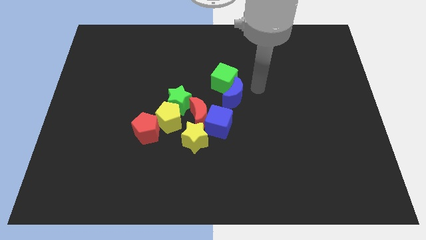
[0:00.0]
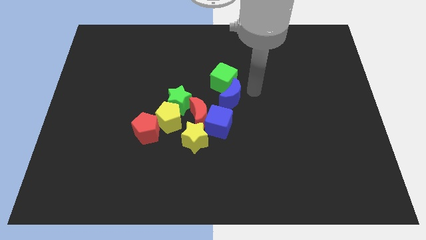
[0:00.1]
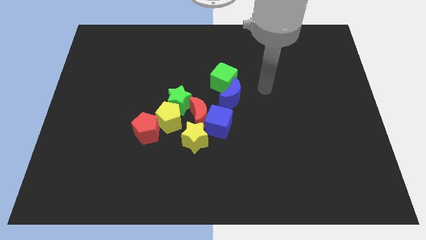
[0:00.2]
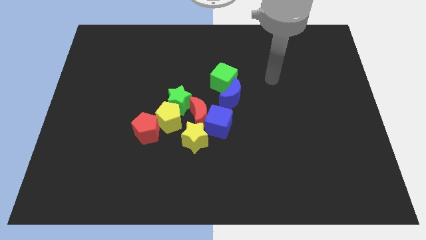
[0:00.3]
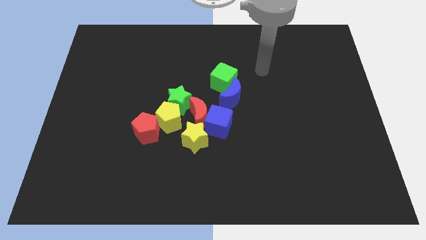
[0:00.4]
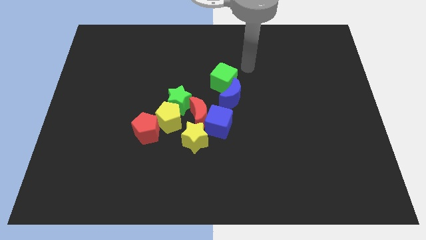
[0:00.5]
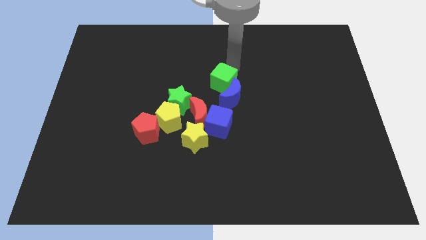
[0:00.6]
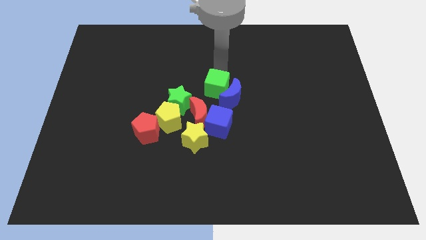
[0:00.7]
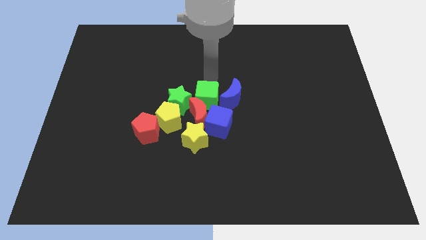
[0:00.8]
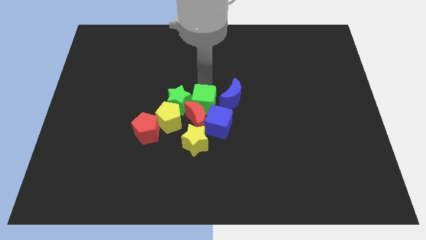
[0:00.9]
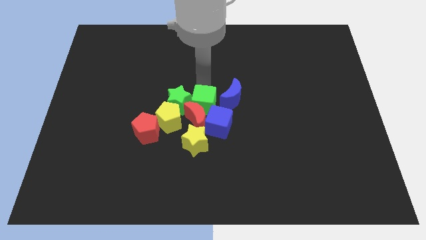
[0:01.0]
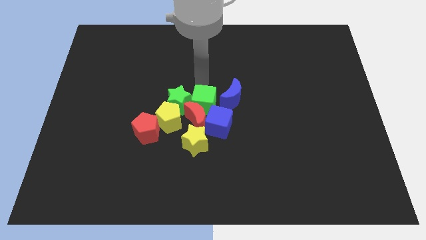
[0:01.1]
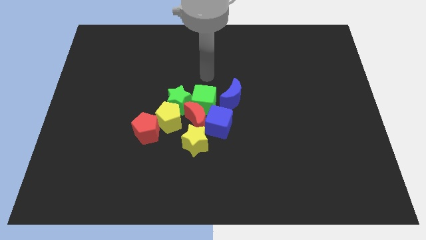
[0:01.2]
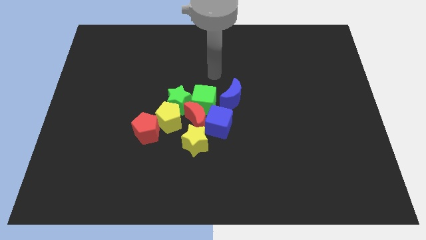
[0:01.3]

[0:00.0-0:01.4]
push the green cube into the group of blocks

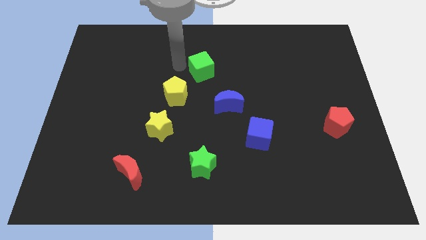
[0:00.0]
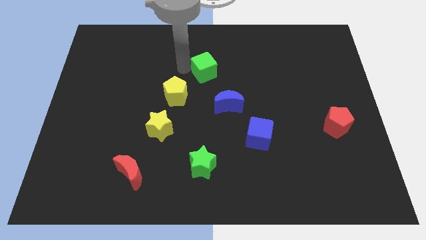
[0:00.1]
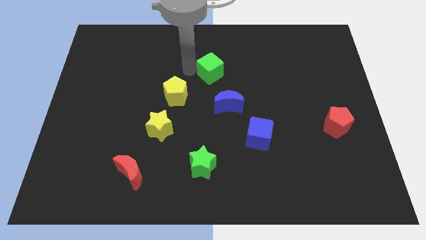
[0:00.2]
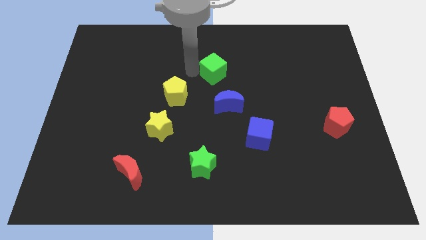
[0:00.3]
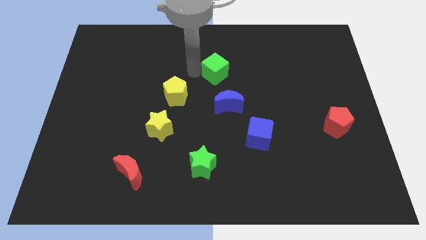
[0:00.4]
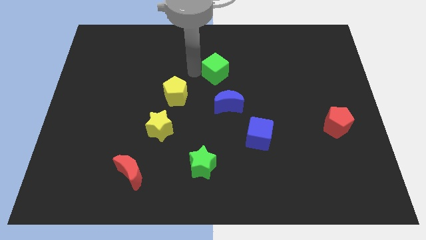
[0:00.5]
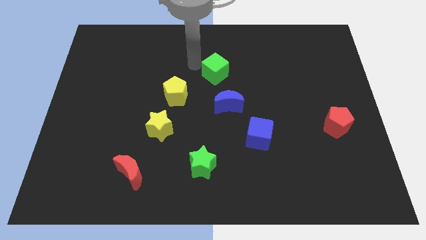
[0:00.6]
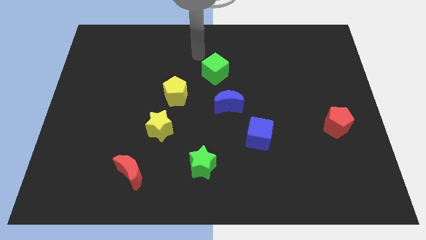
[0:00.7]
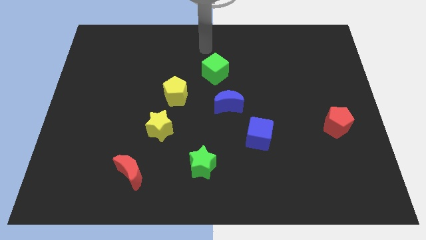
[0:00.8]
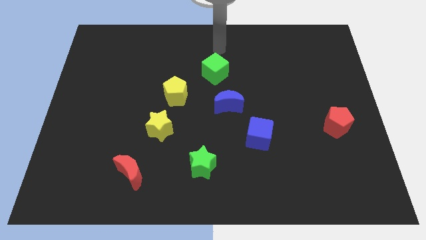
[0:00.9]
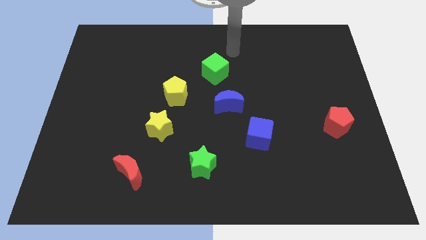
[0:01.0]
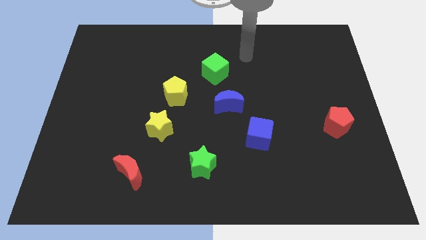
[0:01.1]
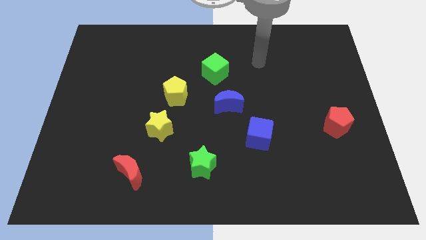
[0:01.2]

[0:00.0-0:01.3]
put the green cube at the top left side of blue moon

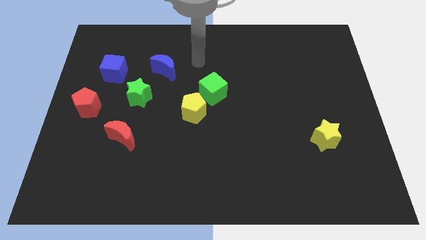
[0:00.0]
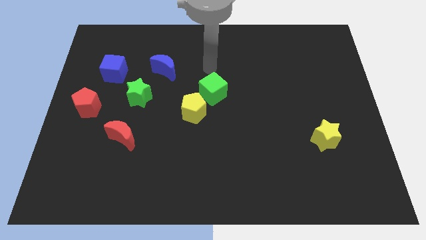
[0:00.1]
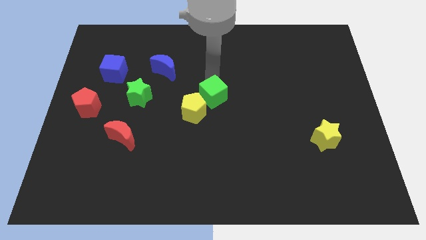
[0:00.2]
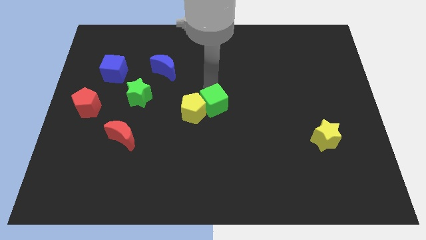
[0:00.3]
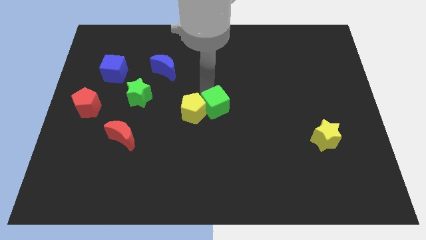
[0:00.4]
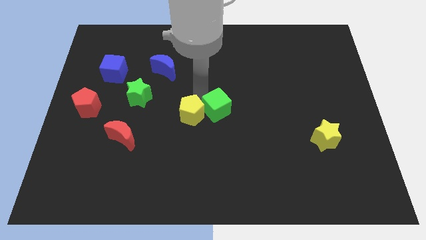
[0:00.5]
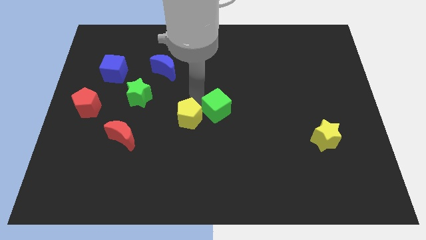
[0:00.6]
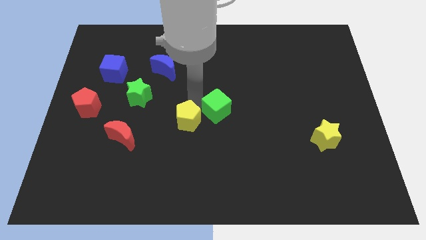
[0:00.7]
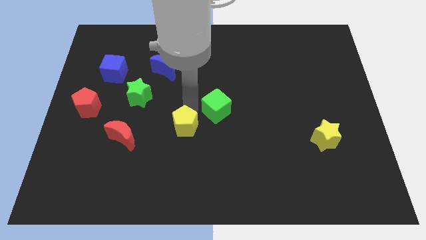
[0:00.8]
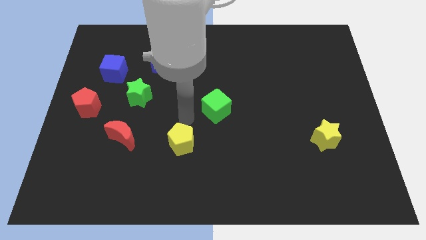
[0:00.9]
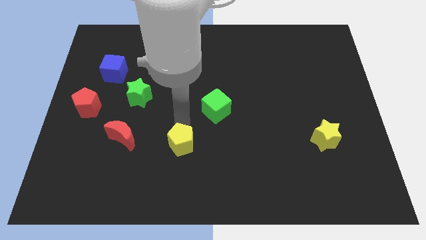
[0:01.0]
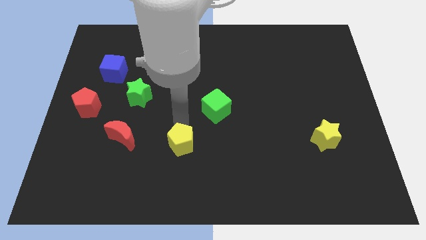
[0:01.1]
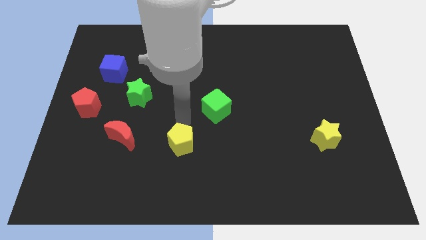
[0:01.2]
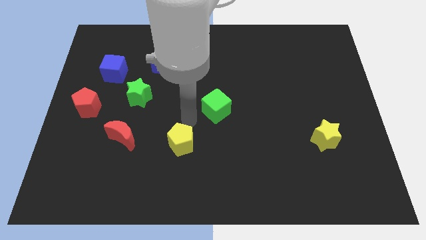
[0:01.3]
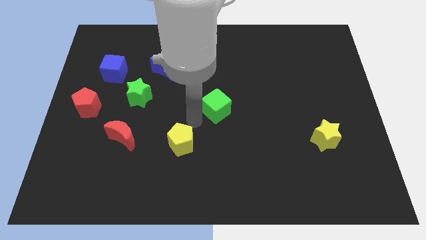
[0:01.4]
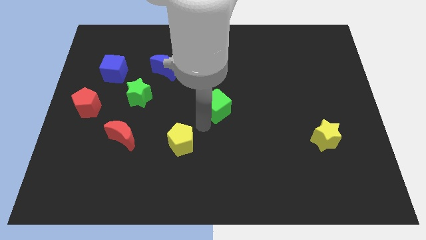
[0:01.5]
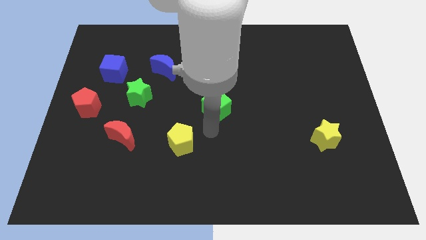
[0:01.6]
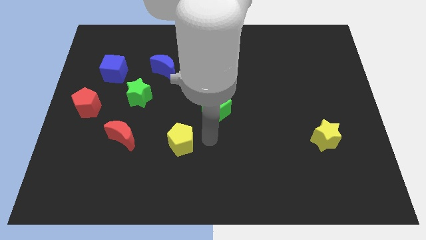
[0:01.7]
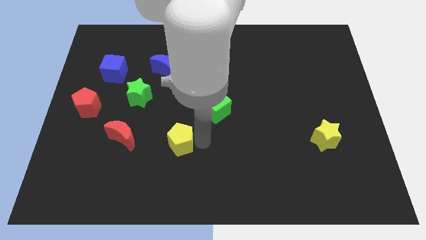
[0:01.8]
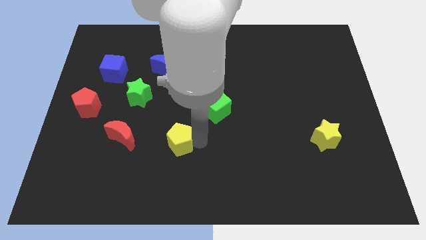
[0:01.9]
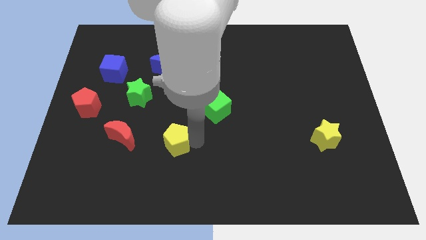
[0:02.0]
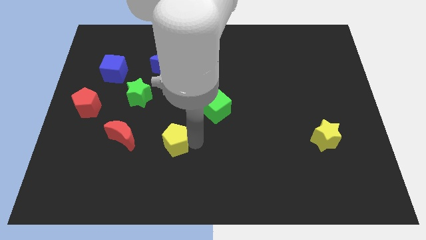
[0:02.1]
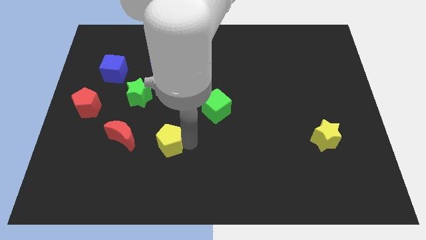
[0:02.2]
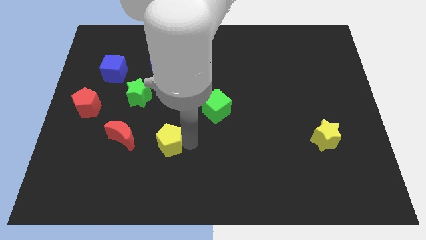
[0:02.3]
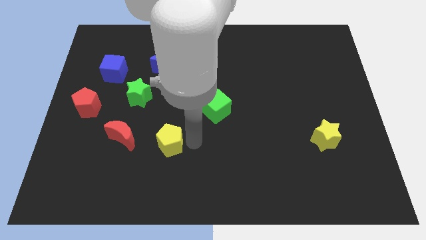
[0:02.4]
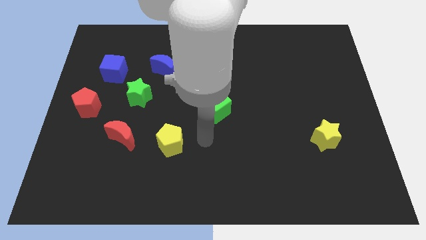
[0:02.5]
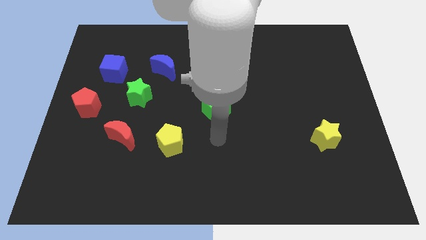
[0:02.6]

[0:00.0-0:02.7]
separate the yellow pentagon from the green cube

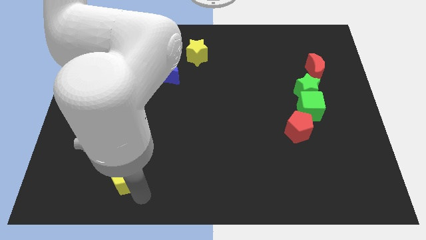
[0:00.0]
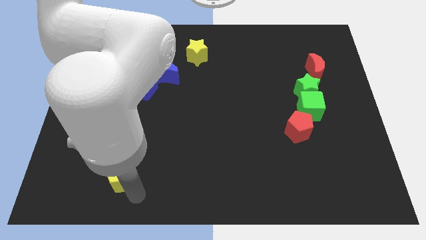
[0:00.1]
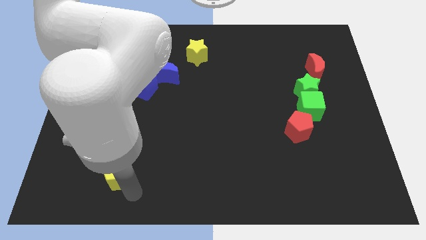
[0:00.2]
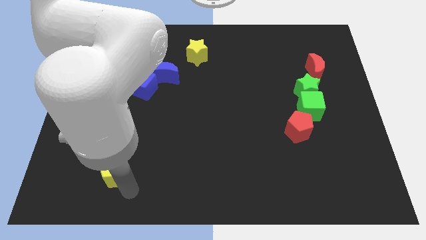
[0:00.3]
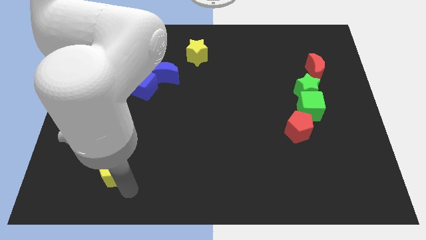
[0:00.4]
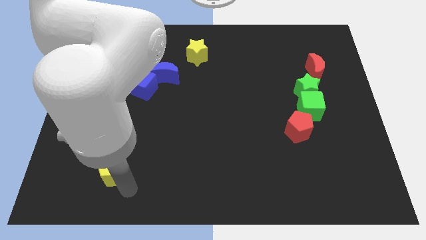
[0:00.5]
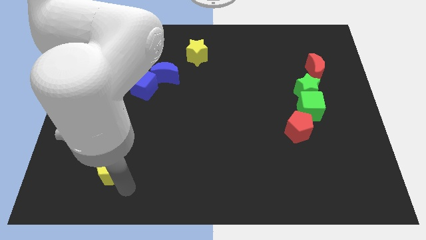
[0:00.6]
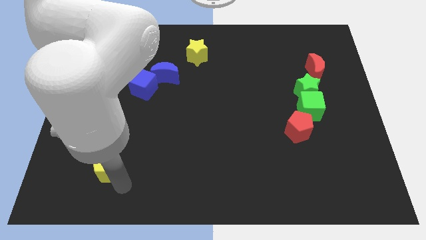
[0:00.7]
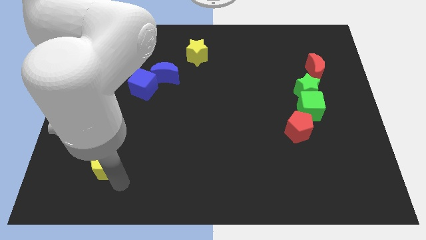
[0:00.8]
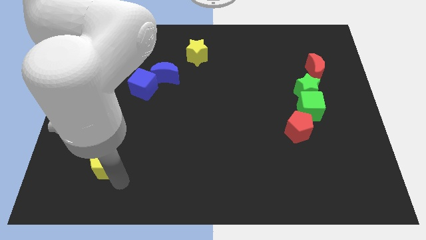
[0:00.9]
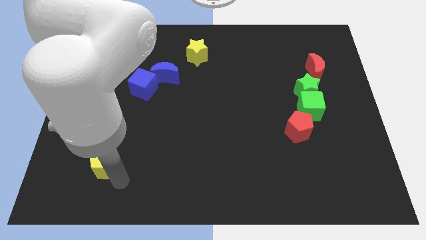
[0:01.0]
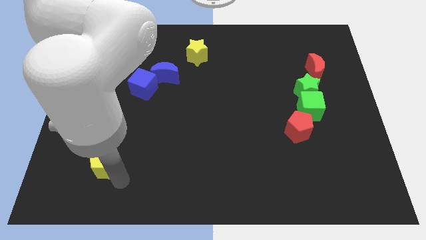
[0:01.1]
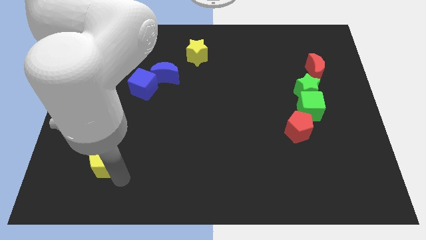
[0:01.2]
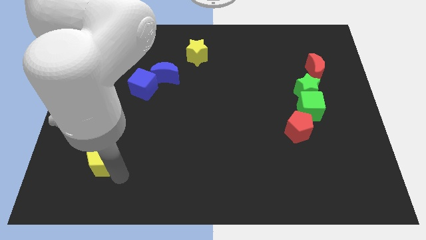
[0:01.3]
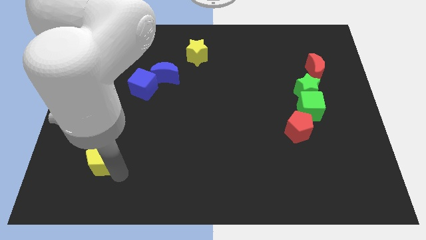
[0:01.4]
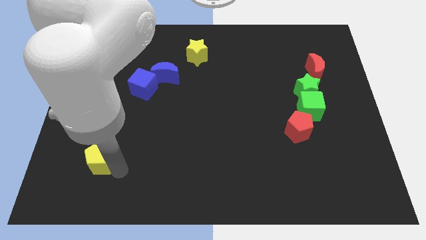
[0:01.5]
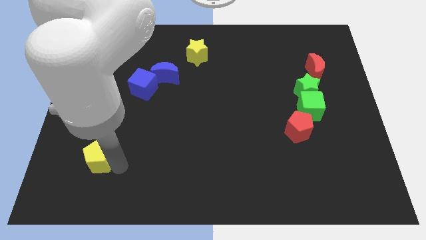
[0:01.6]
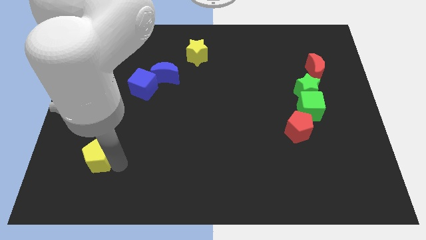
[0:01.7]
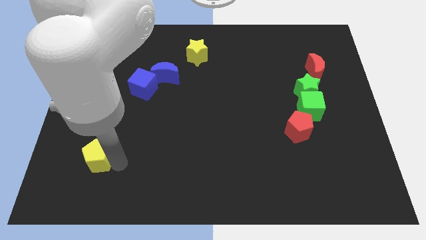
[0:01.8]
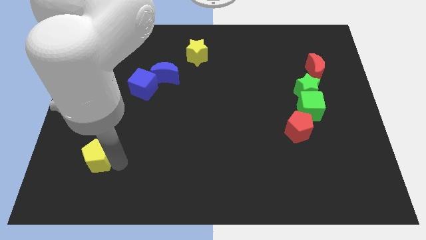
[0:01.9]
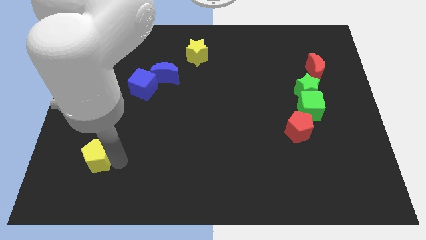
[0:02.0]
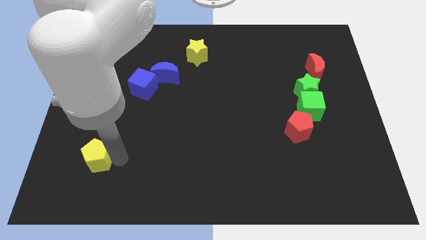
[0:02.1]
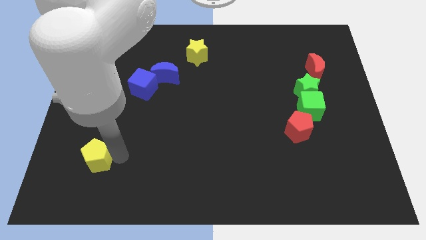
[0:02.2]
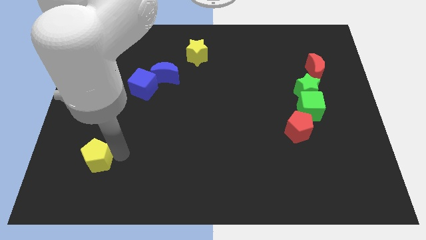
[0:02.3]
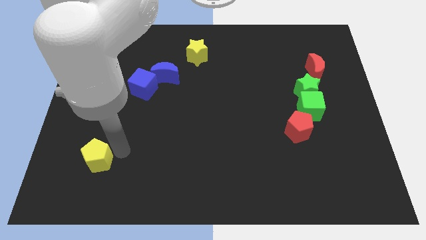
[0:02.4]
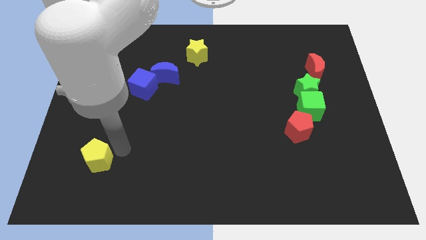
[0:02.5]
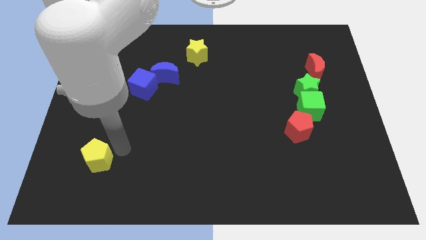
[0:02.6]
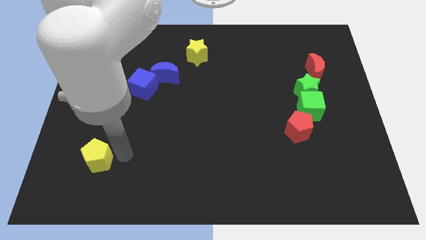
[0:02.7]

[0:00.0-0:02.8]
move the yellow pentagon diagonally towards top

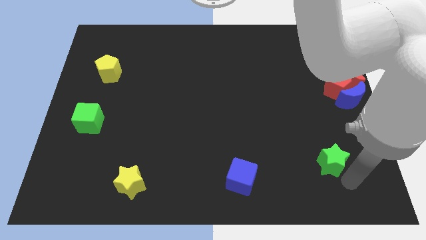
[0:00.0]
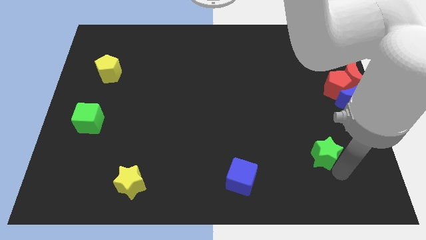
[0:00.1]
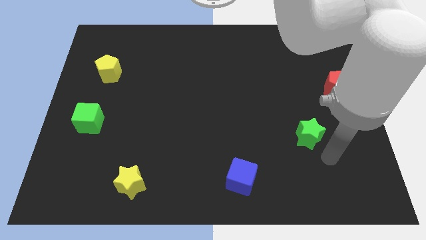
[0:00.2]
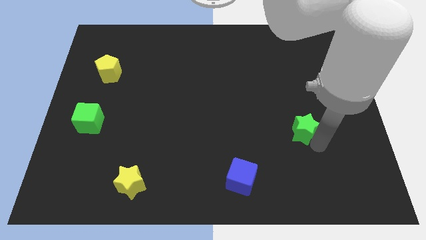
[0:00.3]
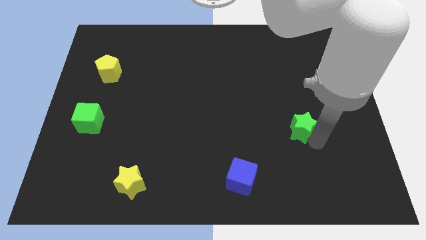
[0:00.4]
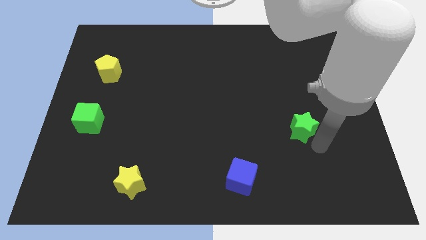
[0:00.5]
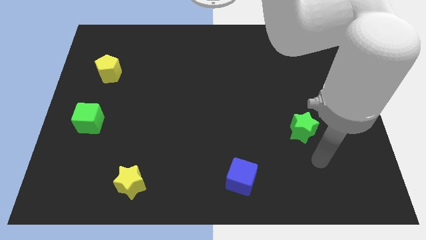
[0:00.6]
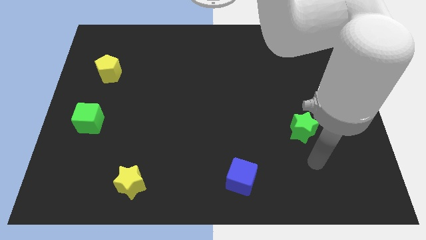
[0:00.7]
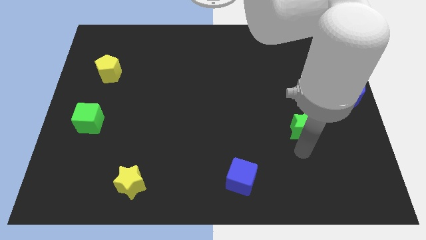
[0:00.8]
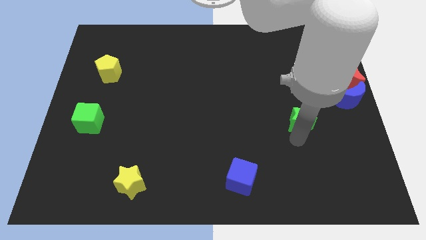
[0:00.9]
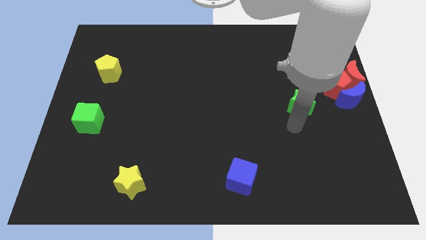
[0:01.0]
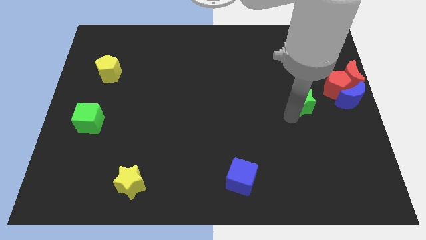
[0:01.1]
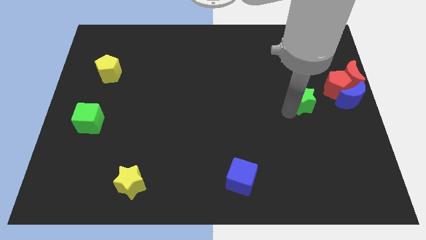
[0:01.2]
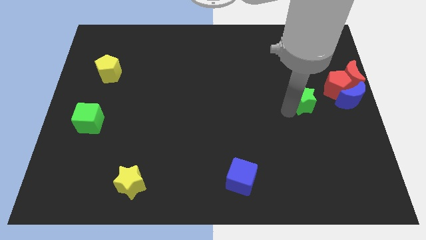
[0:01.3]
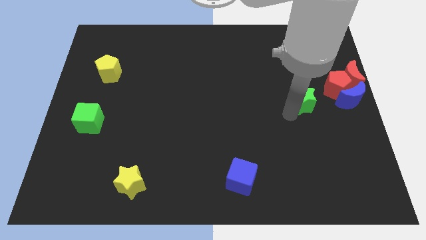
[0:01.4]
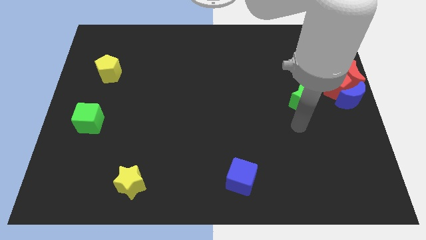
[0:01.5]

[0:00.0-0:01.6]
move the green star to the left of the red pentagon
